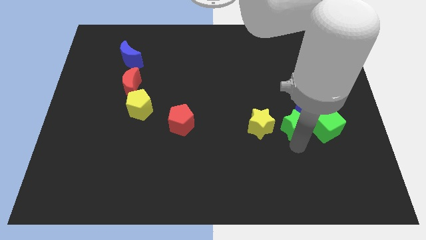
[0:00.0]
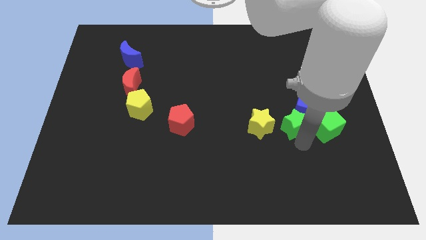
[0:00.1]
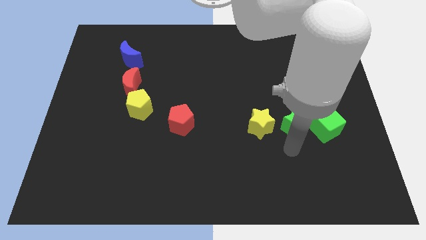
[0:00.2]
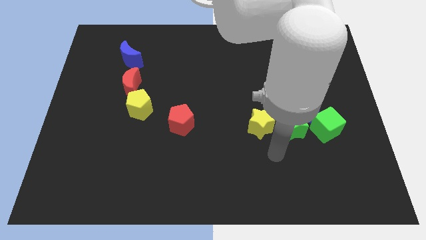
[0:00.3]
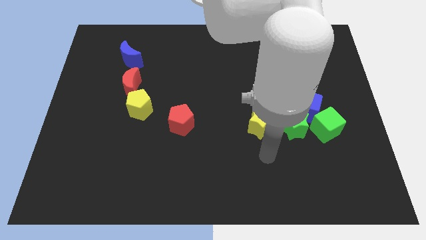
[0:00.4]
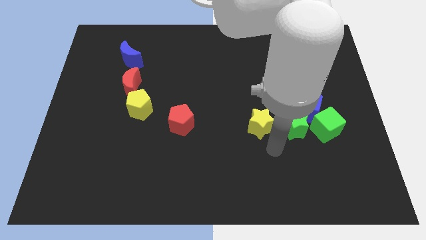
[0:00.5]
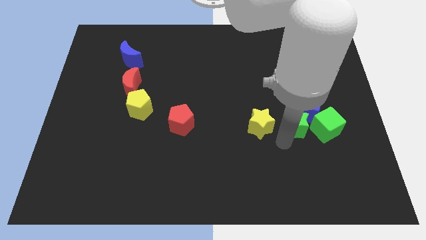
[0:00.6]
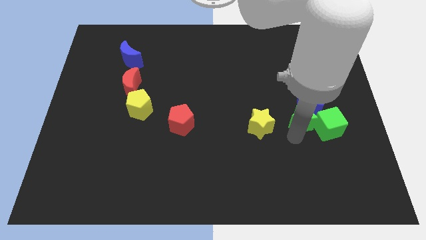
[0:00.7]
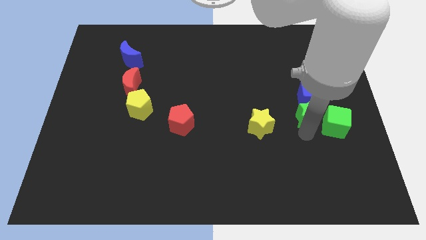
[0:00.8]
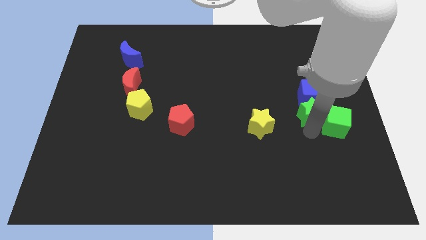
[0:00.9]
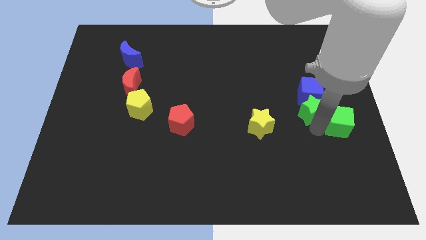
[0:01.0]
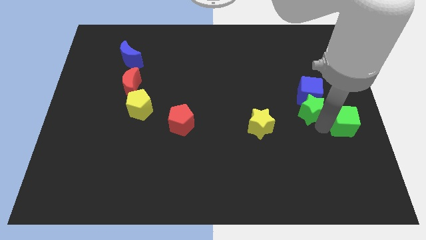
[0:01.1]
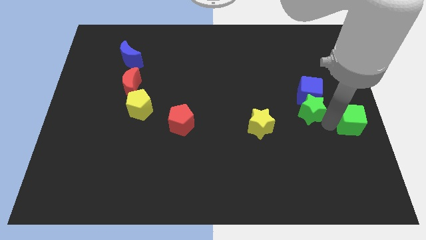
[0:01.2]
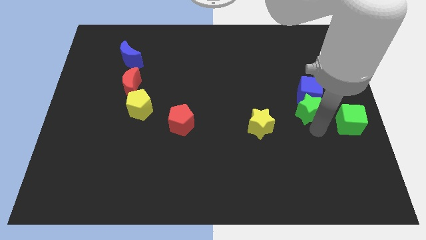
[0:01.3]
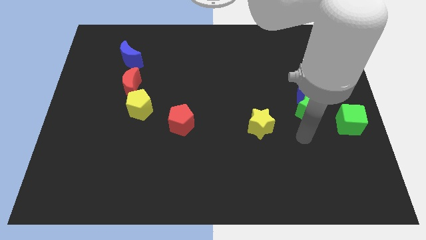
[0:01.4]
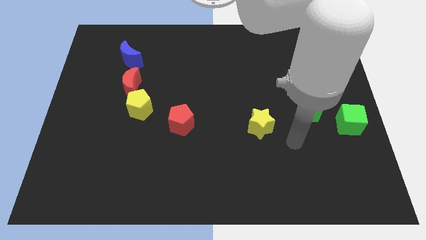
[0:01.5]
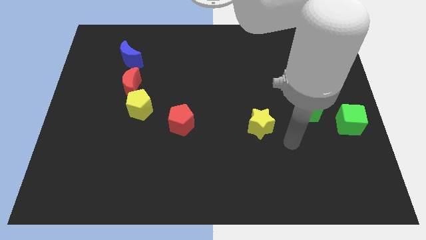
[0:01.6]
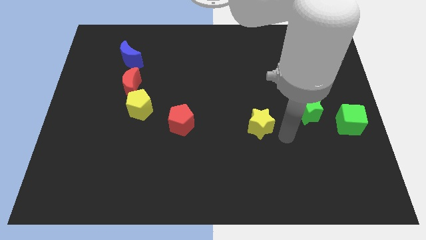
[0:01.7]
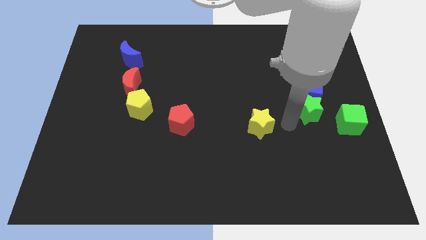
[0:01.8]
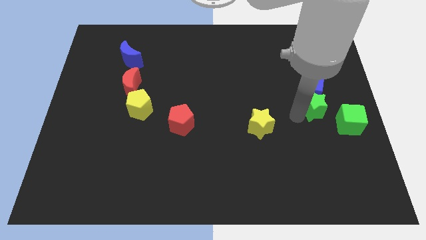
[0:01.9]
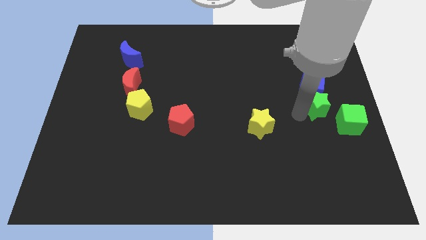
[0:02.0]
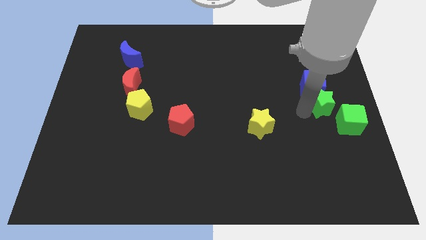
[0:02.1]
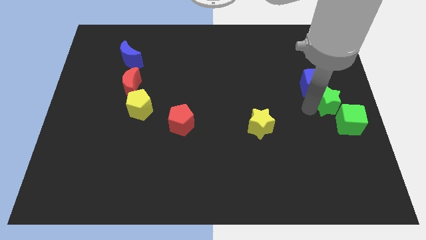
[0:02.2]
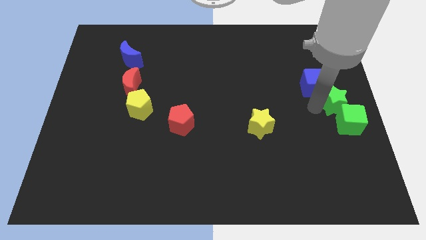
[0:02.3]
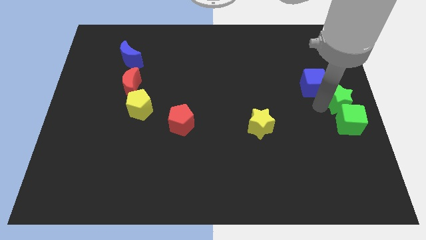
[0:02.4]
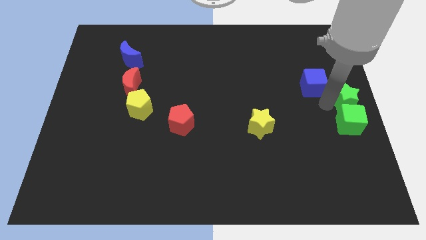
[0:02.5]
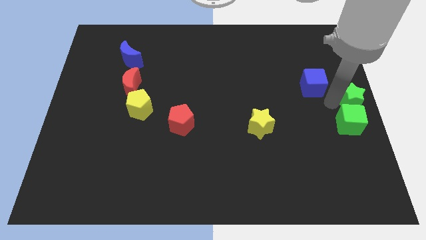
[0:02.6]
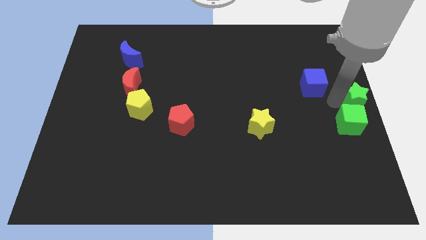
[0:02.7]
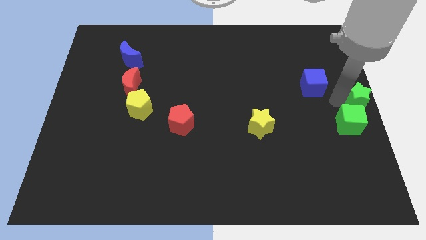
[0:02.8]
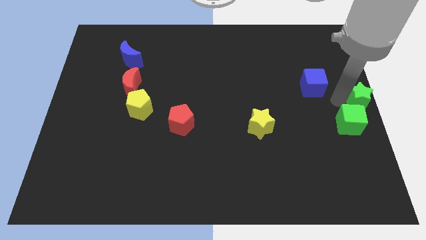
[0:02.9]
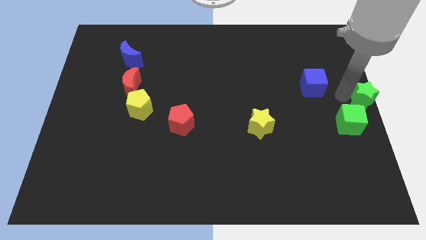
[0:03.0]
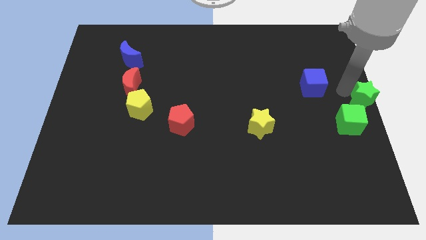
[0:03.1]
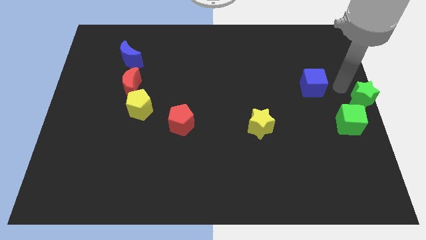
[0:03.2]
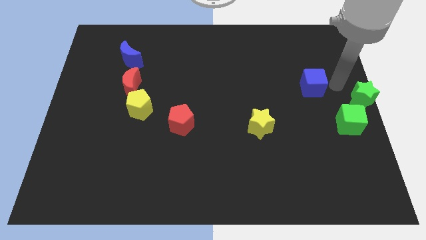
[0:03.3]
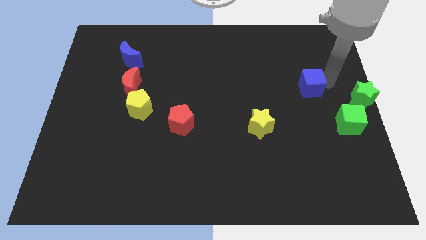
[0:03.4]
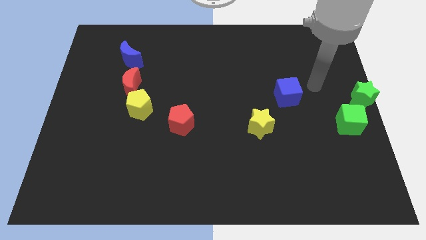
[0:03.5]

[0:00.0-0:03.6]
move green star at center right

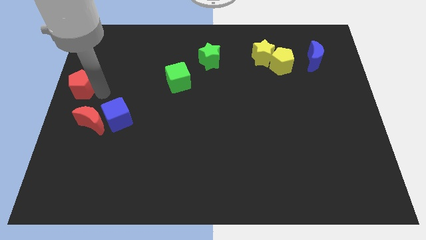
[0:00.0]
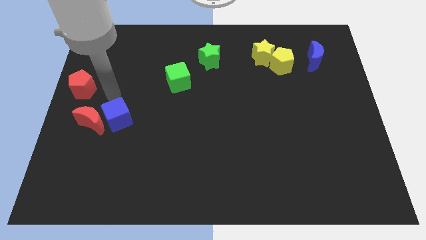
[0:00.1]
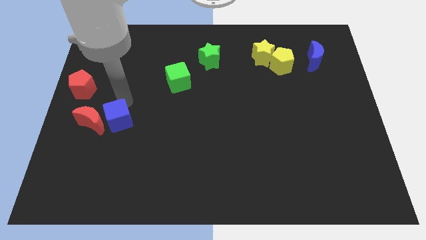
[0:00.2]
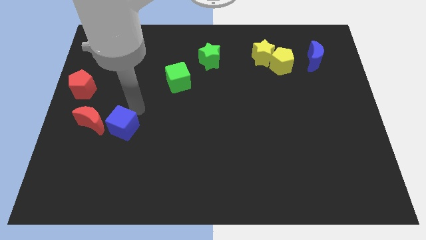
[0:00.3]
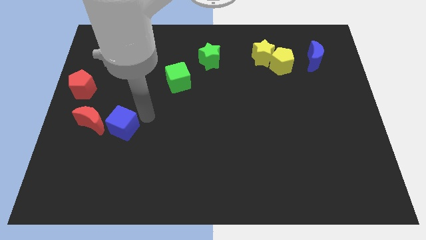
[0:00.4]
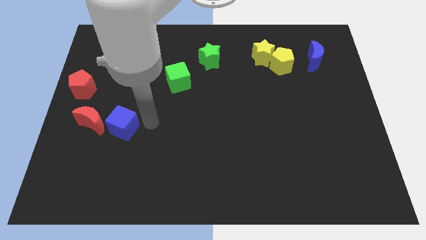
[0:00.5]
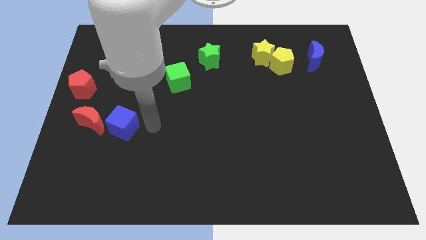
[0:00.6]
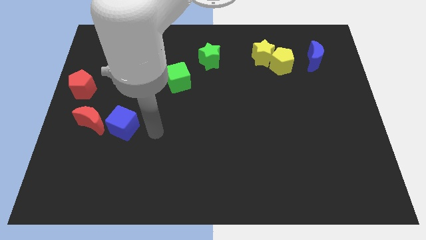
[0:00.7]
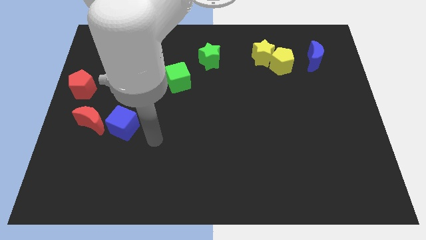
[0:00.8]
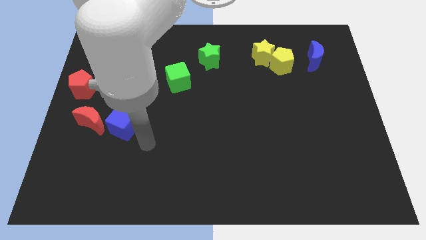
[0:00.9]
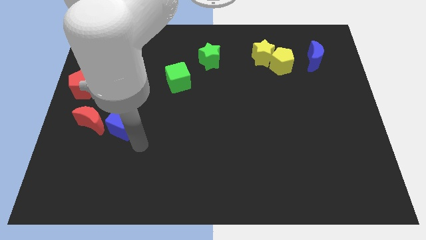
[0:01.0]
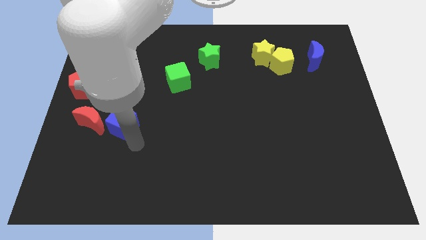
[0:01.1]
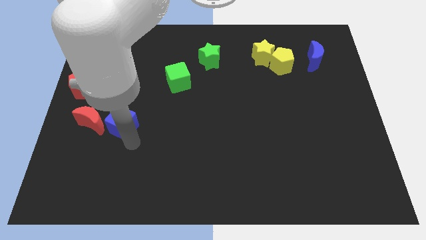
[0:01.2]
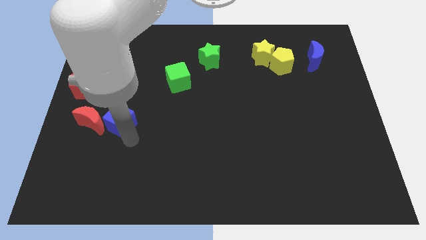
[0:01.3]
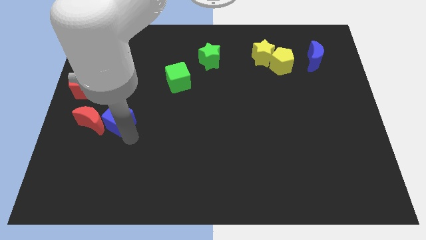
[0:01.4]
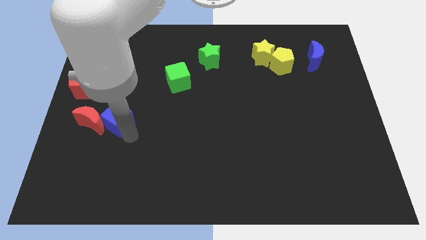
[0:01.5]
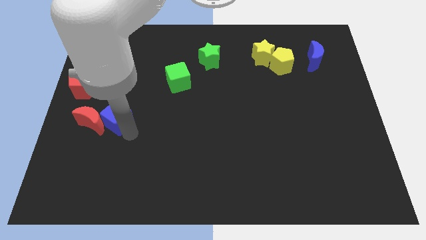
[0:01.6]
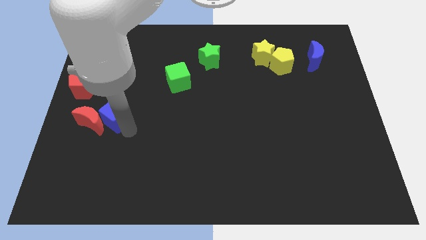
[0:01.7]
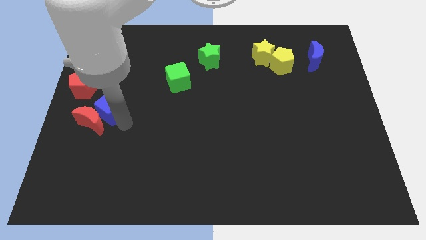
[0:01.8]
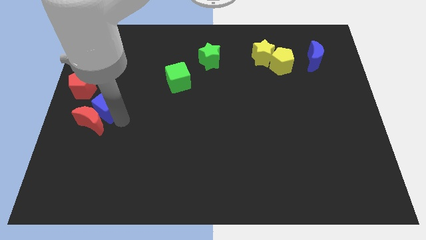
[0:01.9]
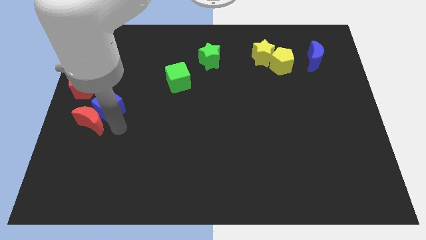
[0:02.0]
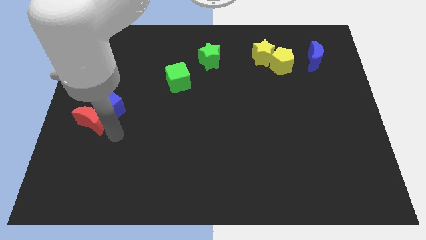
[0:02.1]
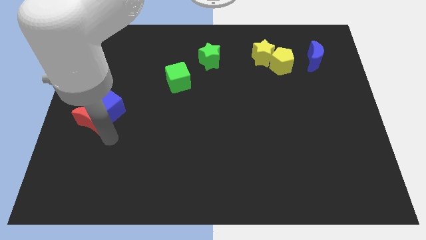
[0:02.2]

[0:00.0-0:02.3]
move the blue cube close to the red pentagon

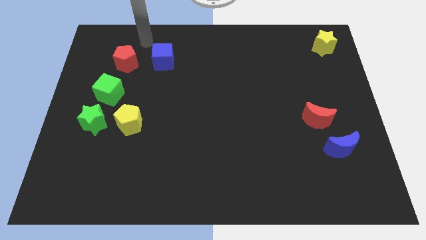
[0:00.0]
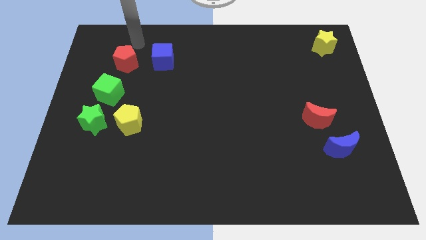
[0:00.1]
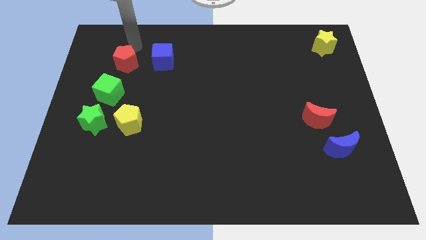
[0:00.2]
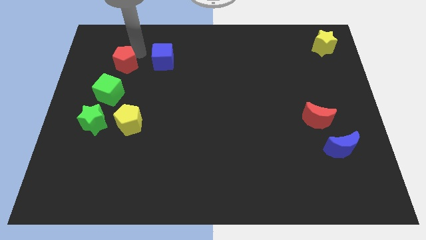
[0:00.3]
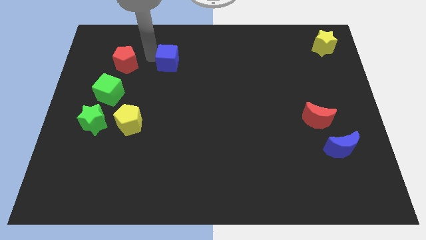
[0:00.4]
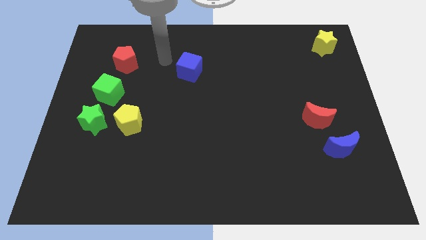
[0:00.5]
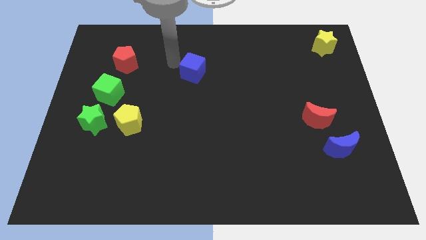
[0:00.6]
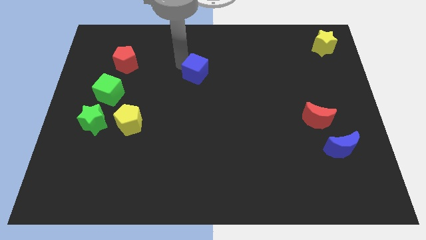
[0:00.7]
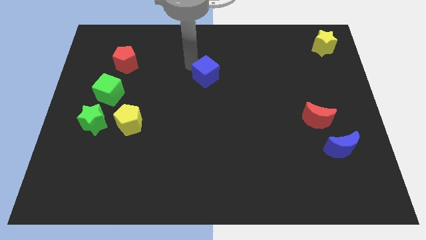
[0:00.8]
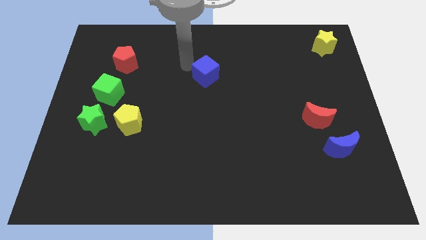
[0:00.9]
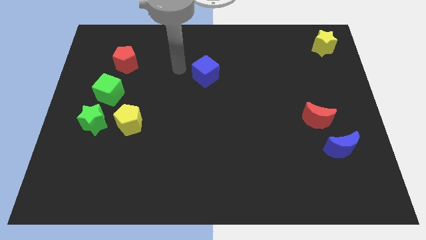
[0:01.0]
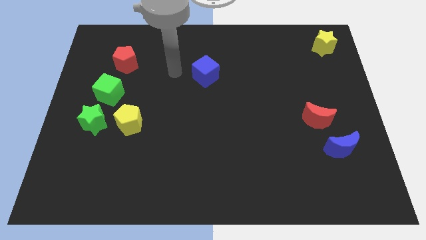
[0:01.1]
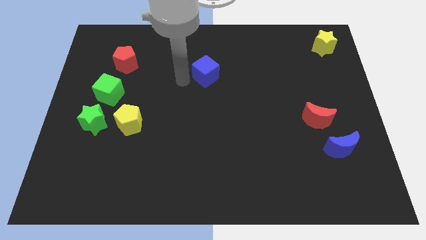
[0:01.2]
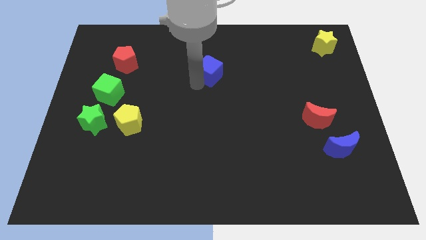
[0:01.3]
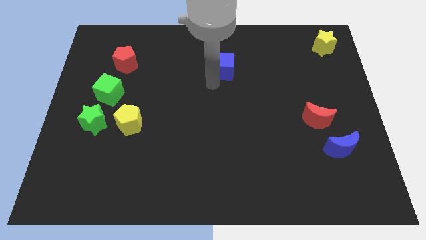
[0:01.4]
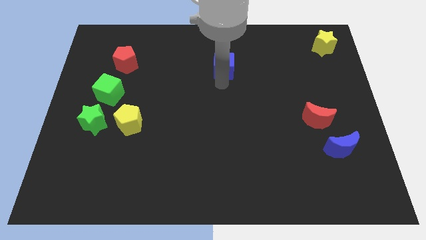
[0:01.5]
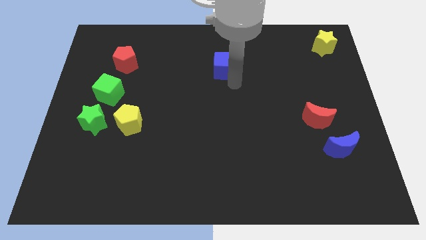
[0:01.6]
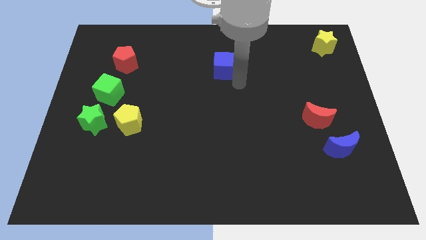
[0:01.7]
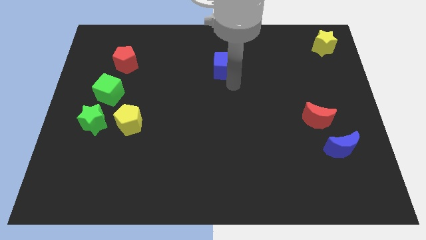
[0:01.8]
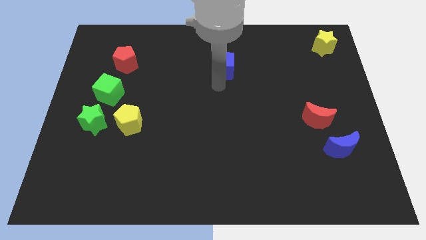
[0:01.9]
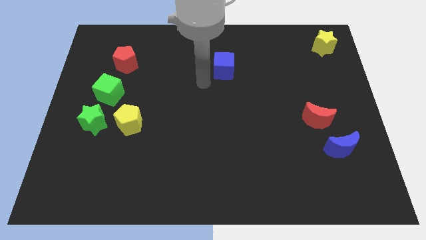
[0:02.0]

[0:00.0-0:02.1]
slide the blue cube away from the red pentagon

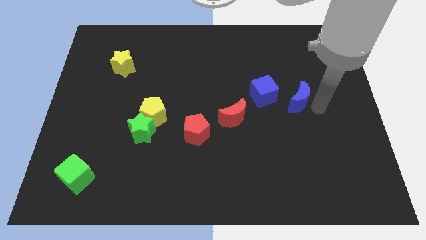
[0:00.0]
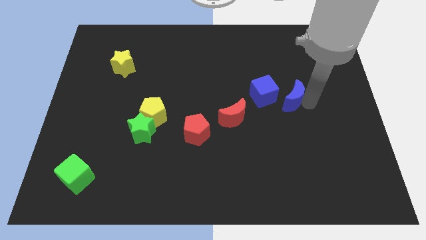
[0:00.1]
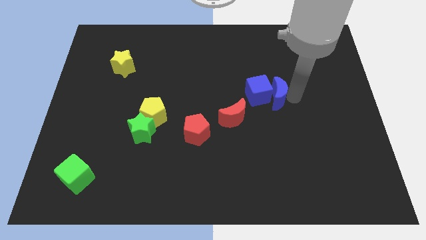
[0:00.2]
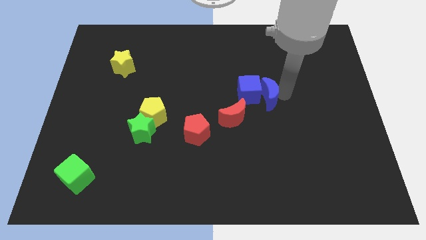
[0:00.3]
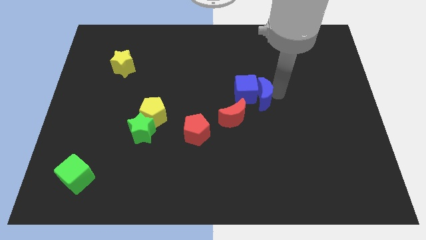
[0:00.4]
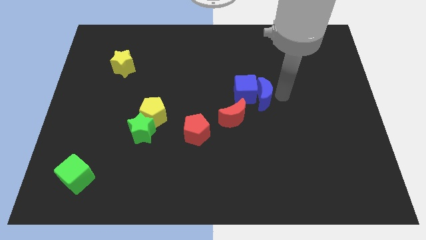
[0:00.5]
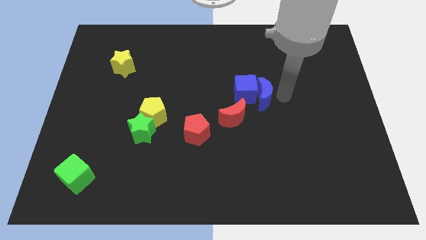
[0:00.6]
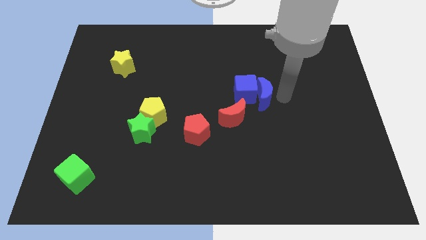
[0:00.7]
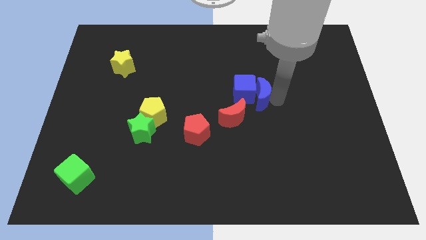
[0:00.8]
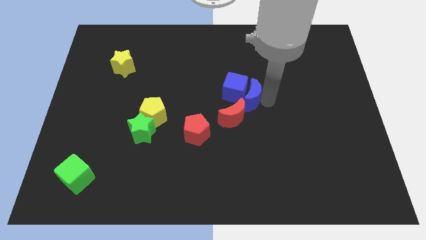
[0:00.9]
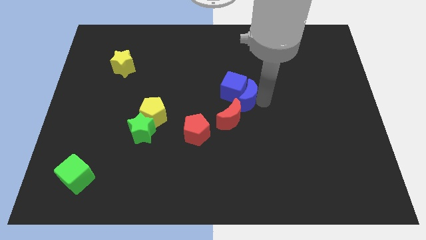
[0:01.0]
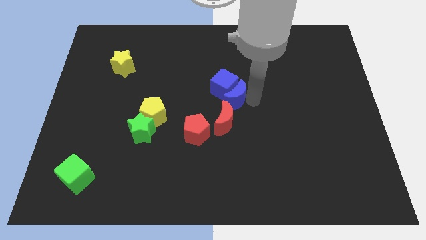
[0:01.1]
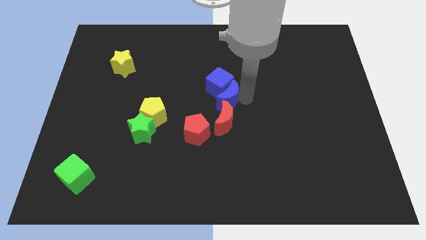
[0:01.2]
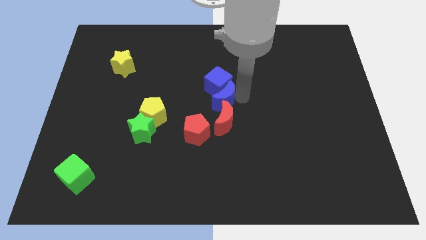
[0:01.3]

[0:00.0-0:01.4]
place blue crescent above red crescent
